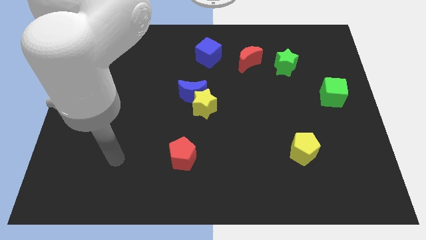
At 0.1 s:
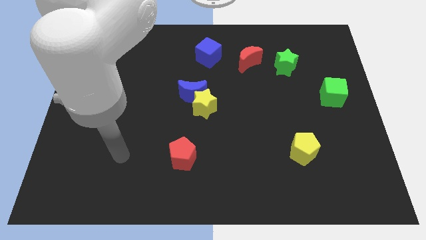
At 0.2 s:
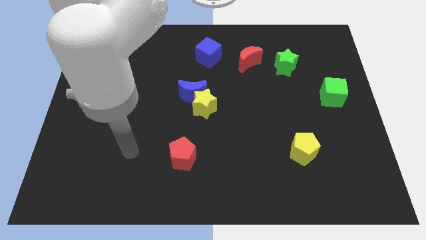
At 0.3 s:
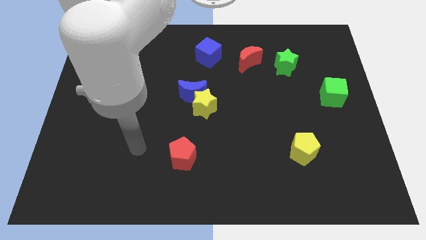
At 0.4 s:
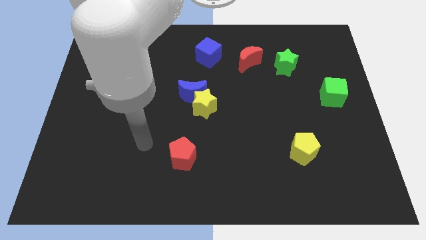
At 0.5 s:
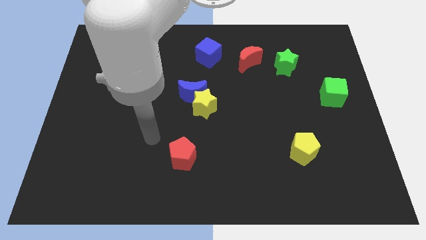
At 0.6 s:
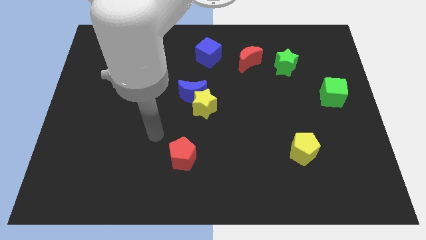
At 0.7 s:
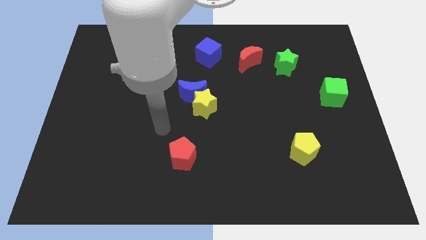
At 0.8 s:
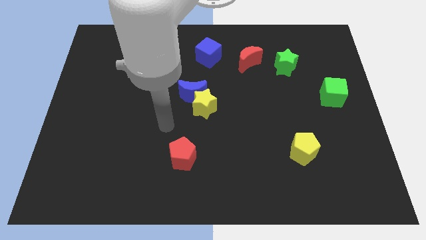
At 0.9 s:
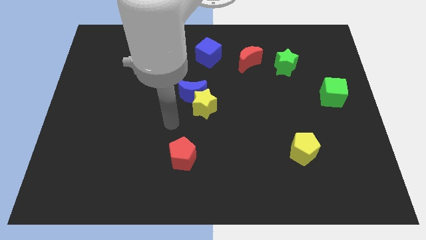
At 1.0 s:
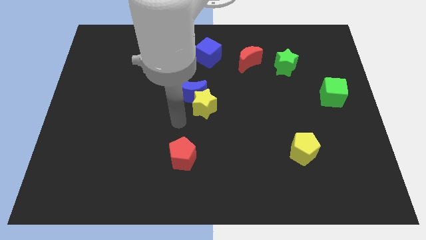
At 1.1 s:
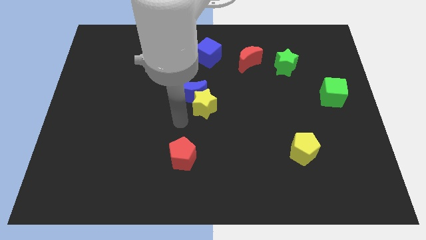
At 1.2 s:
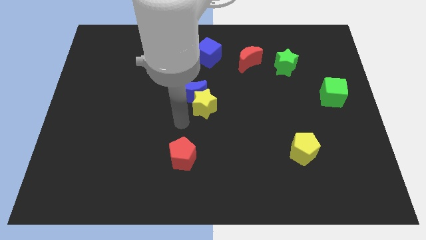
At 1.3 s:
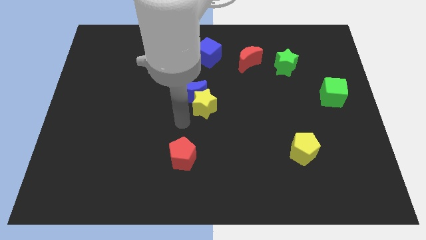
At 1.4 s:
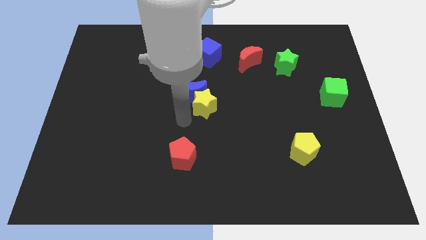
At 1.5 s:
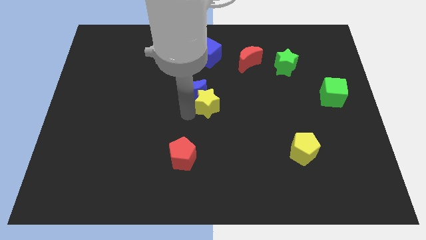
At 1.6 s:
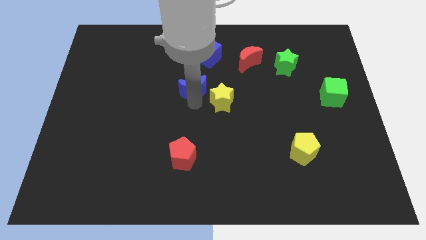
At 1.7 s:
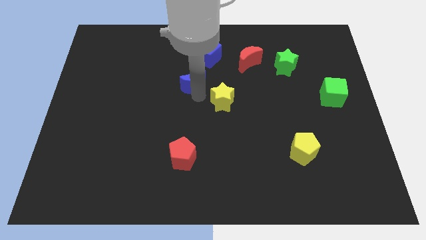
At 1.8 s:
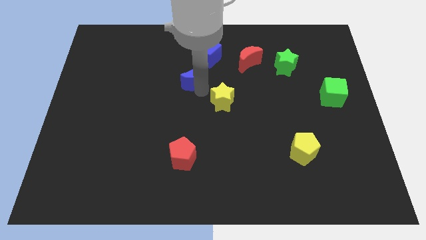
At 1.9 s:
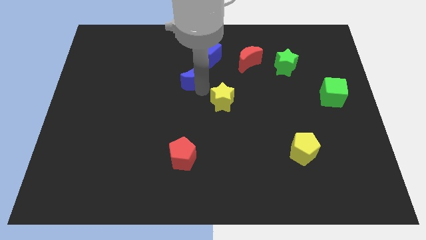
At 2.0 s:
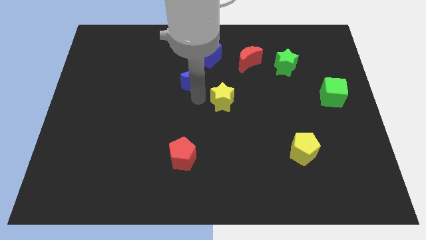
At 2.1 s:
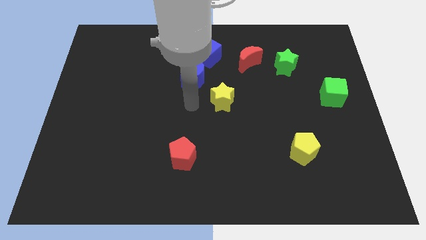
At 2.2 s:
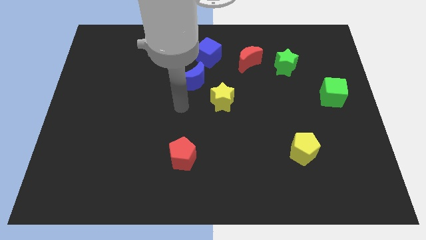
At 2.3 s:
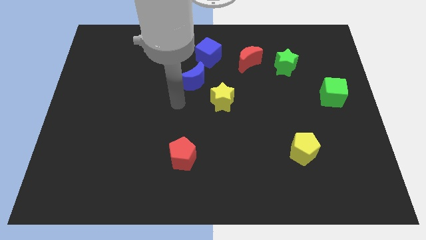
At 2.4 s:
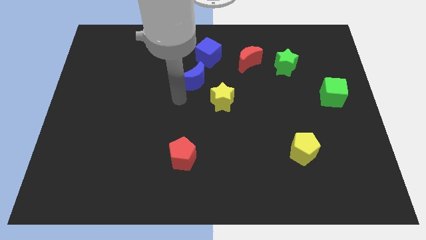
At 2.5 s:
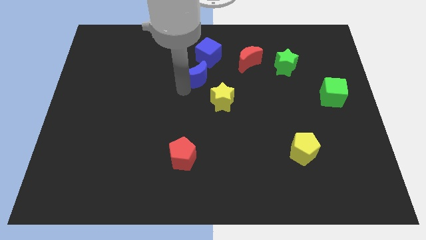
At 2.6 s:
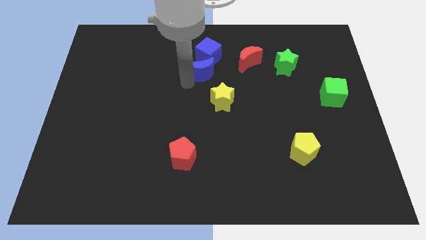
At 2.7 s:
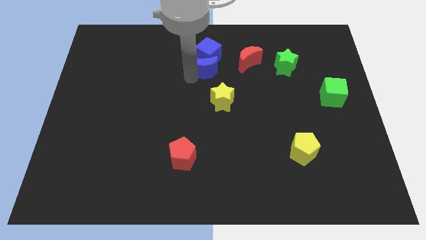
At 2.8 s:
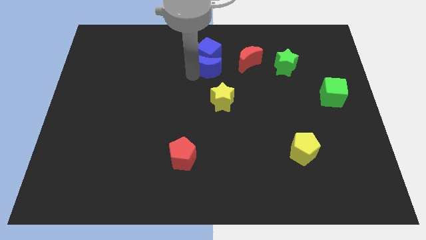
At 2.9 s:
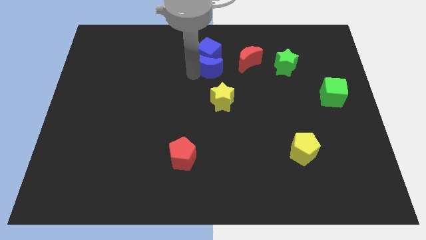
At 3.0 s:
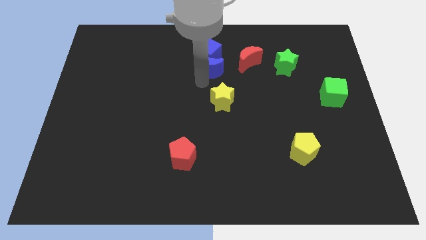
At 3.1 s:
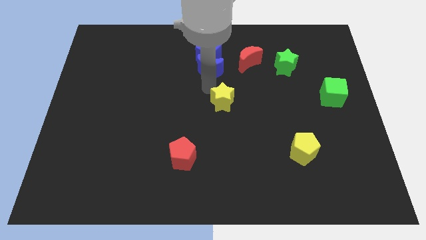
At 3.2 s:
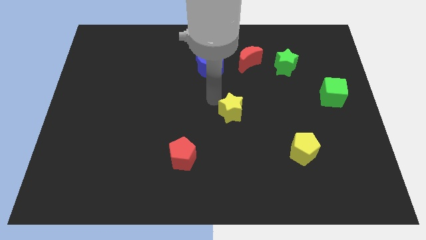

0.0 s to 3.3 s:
push the blue moon into blue cube

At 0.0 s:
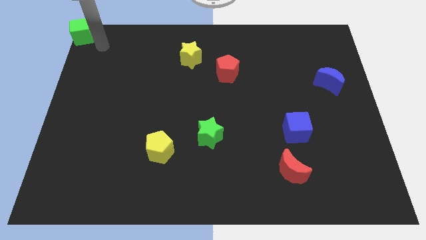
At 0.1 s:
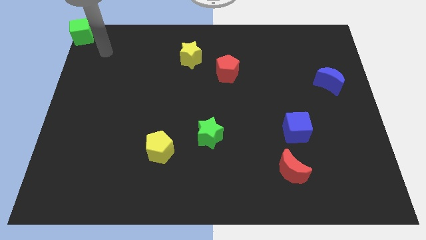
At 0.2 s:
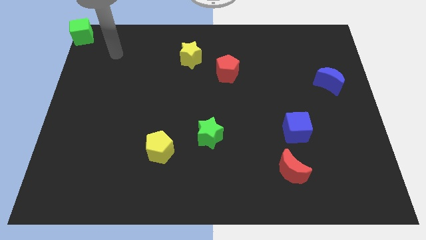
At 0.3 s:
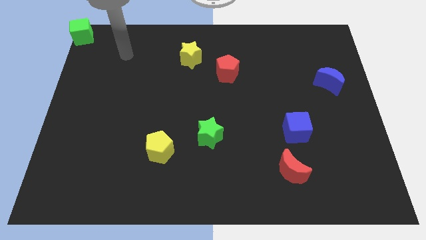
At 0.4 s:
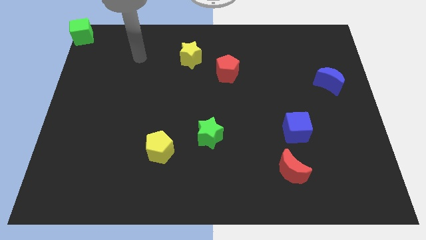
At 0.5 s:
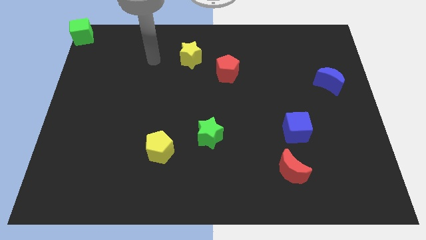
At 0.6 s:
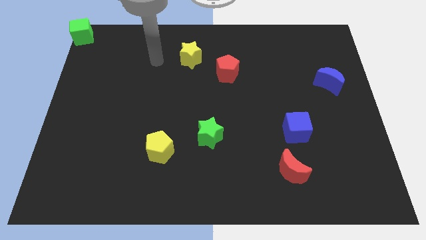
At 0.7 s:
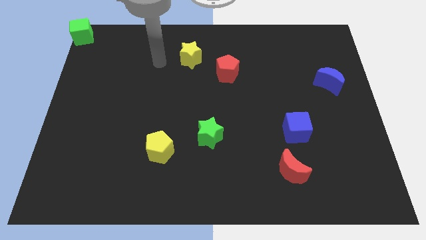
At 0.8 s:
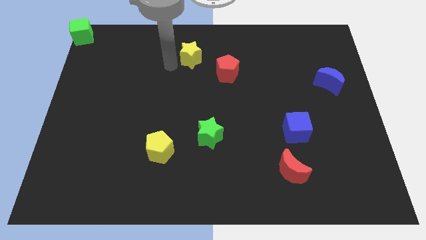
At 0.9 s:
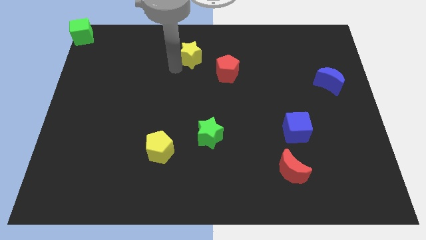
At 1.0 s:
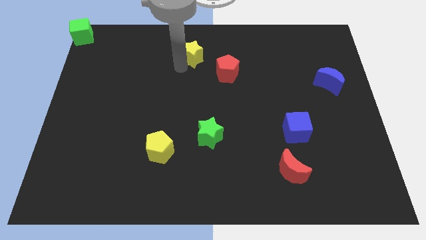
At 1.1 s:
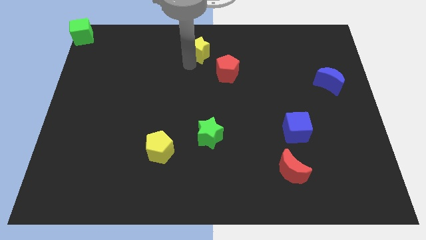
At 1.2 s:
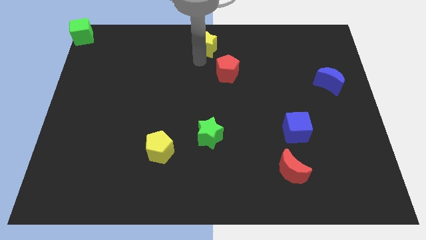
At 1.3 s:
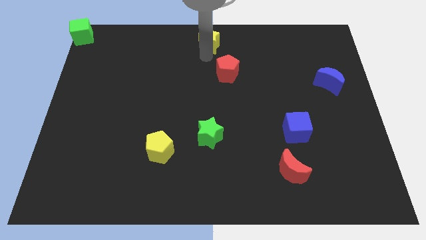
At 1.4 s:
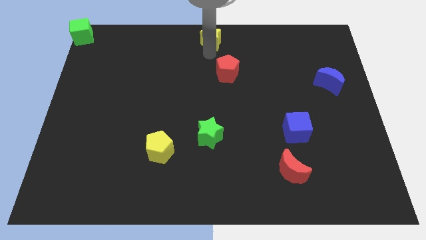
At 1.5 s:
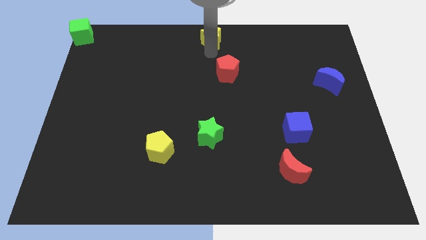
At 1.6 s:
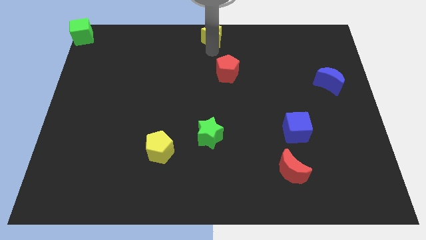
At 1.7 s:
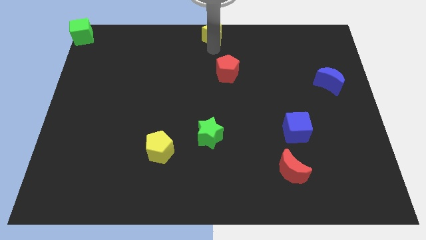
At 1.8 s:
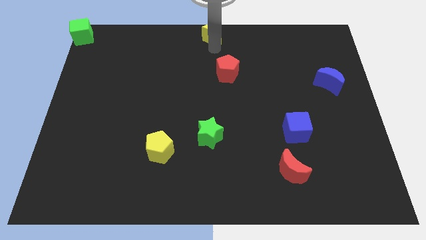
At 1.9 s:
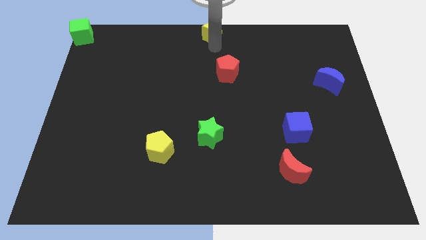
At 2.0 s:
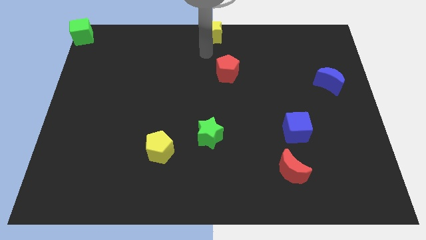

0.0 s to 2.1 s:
push yellow star to the top centre of the board

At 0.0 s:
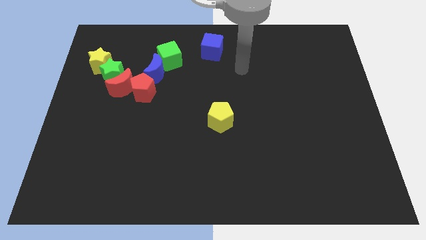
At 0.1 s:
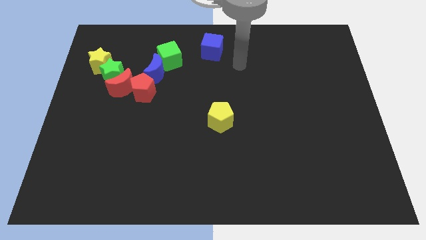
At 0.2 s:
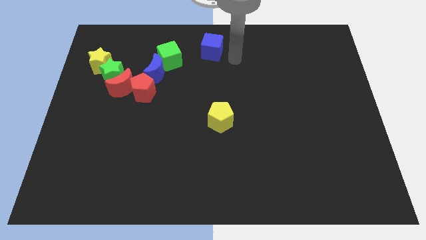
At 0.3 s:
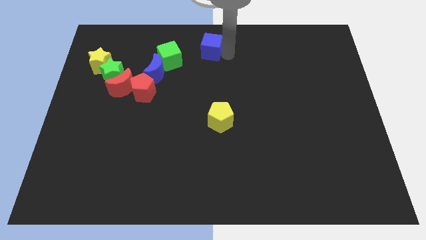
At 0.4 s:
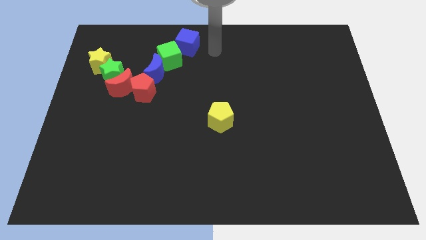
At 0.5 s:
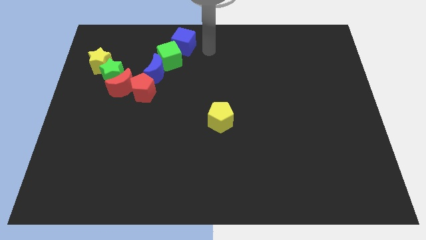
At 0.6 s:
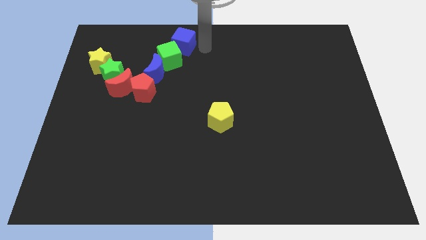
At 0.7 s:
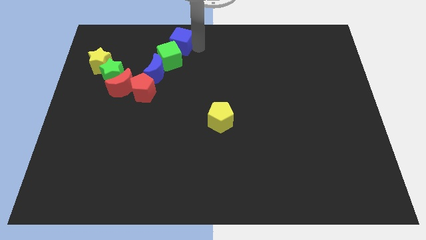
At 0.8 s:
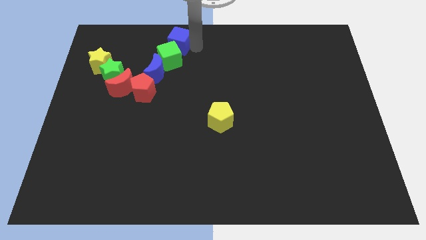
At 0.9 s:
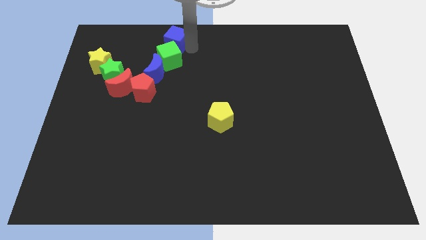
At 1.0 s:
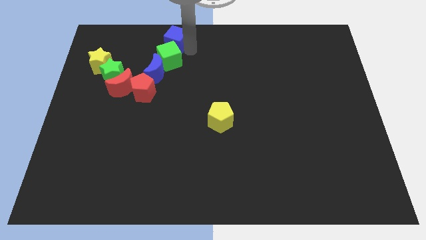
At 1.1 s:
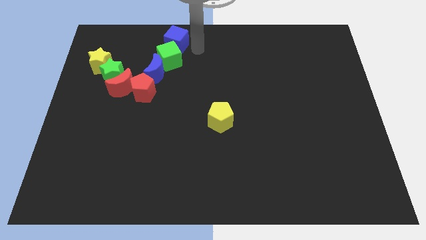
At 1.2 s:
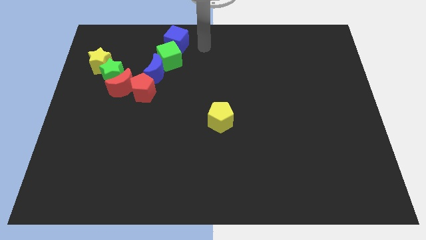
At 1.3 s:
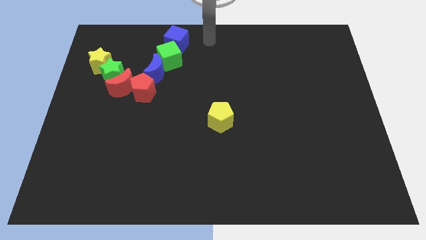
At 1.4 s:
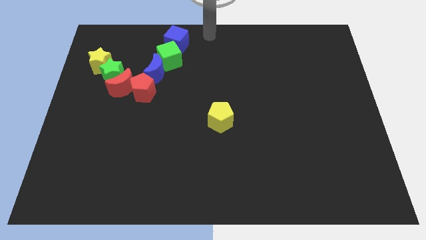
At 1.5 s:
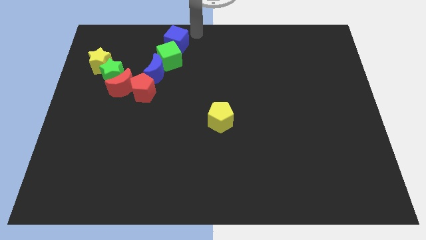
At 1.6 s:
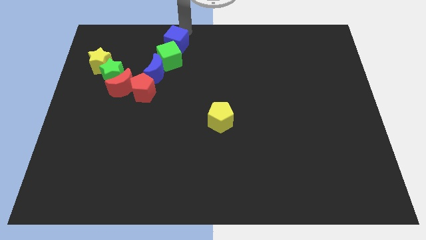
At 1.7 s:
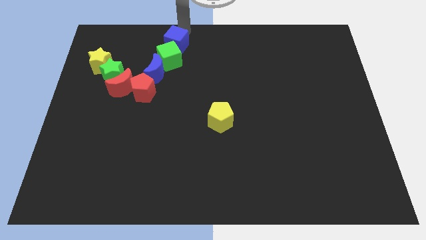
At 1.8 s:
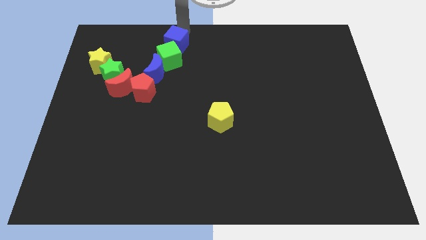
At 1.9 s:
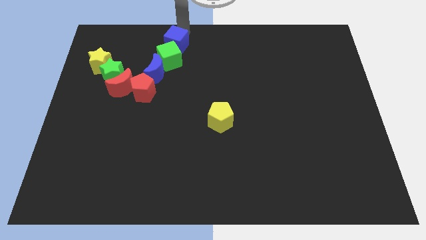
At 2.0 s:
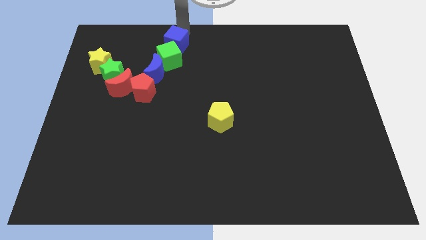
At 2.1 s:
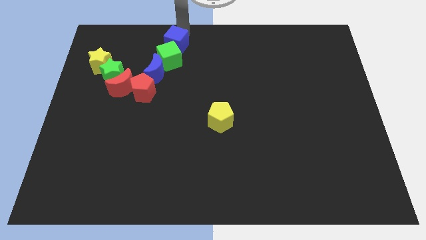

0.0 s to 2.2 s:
move blue cube into group of blocks

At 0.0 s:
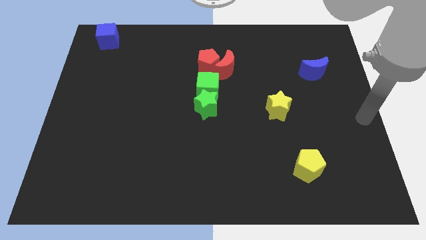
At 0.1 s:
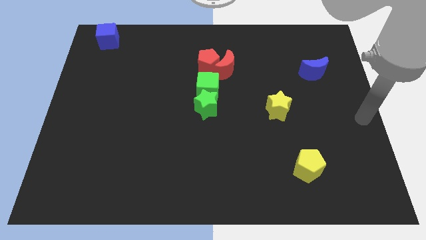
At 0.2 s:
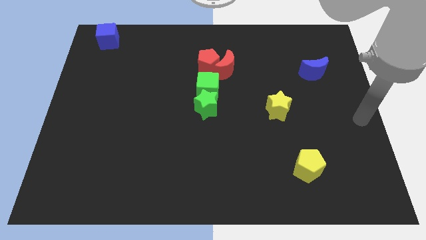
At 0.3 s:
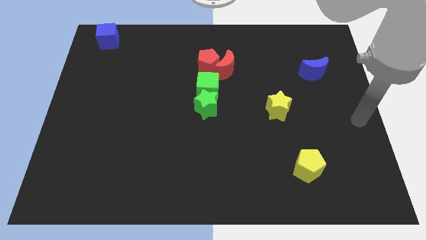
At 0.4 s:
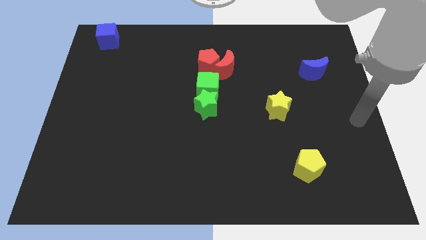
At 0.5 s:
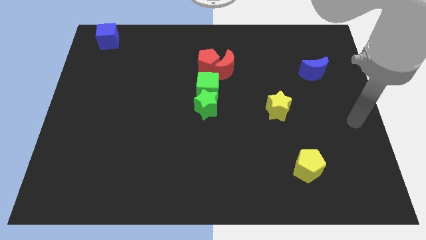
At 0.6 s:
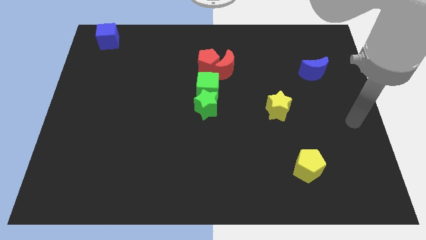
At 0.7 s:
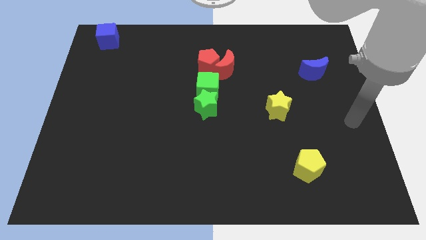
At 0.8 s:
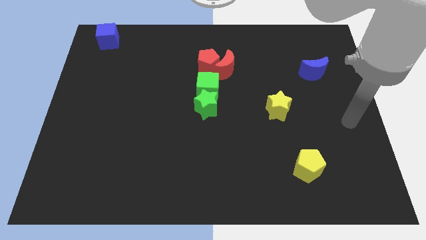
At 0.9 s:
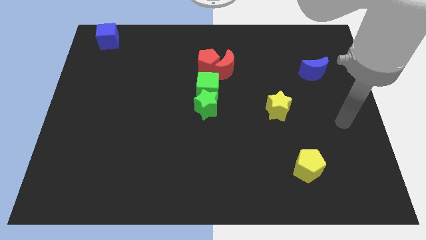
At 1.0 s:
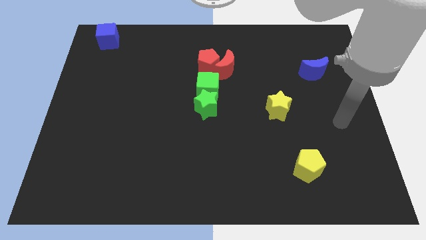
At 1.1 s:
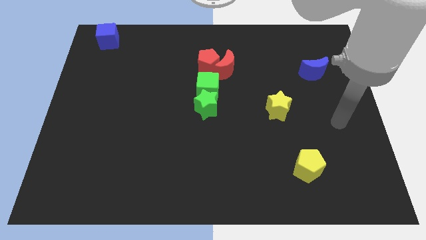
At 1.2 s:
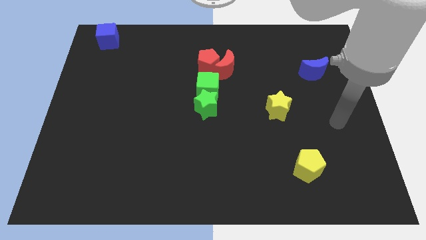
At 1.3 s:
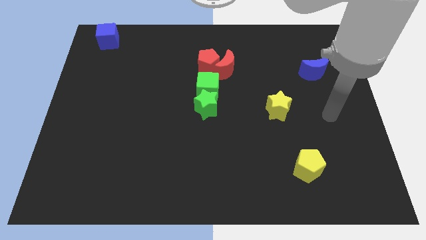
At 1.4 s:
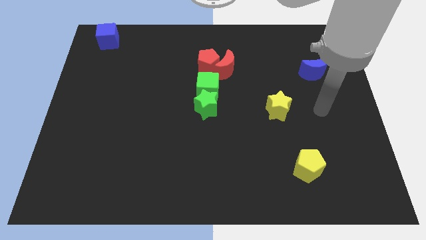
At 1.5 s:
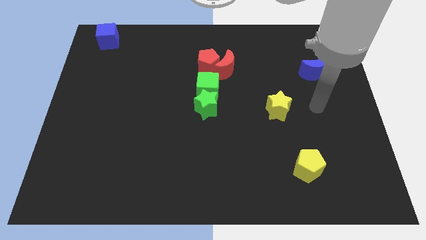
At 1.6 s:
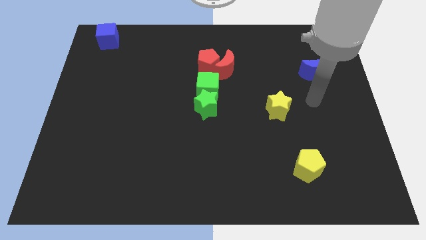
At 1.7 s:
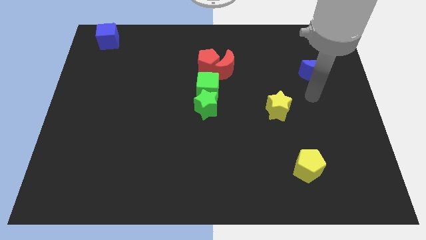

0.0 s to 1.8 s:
point your hand below the blue moon
